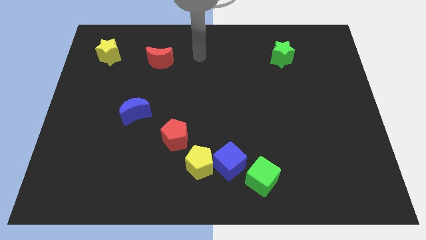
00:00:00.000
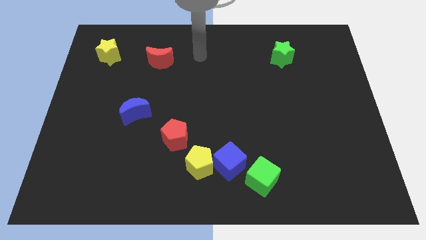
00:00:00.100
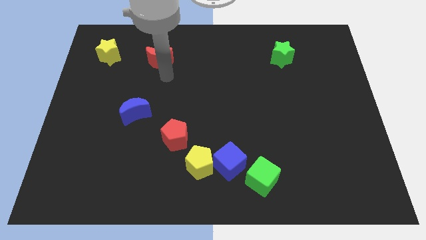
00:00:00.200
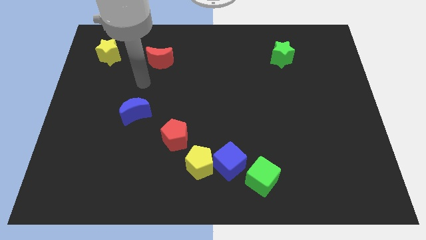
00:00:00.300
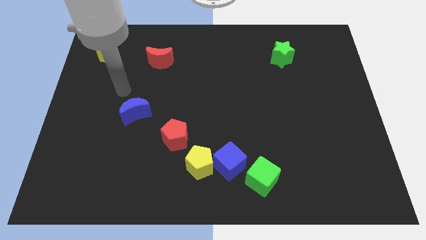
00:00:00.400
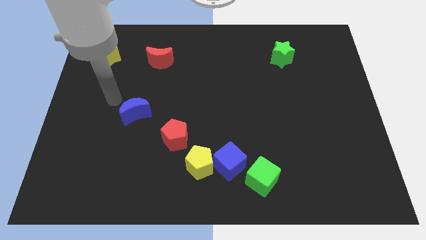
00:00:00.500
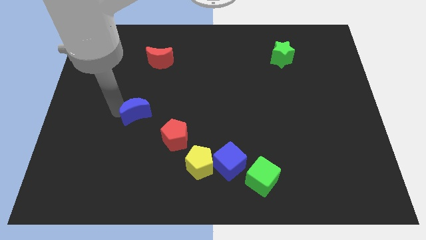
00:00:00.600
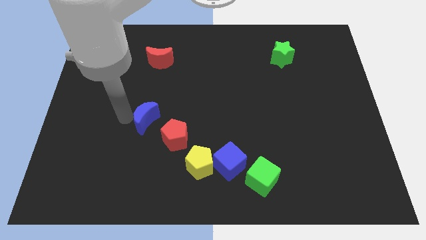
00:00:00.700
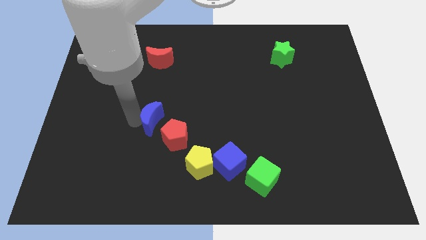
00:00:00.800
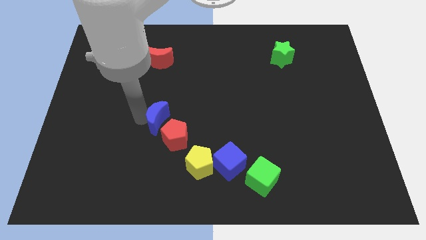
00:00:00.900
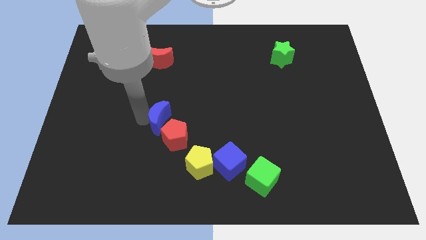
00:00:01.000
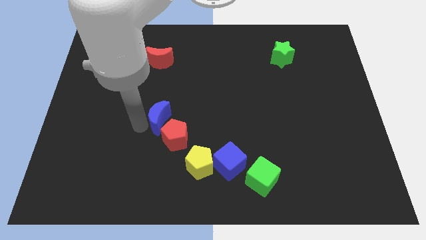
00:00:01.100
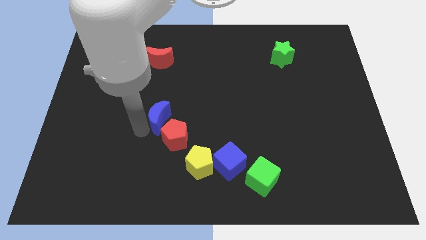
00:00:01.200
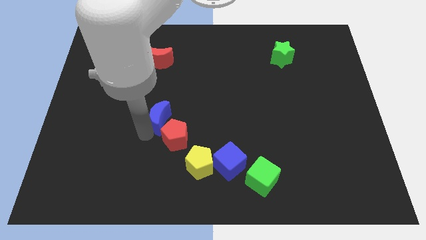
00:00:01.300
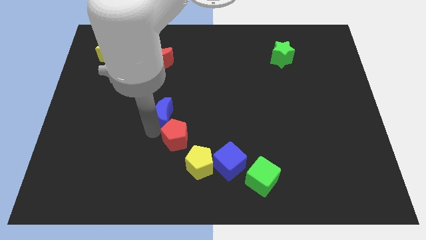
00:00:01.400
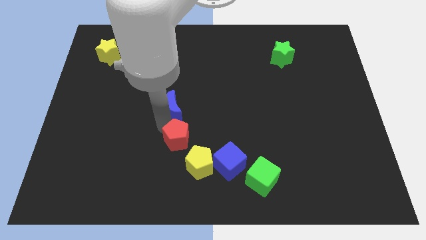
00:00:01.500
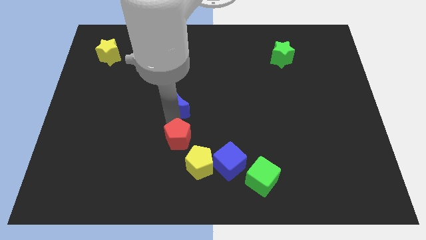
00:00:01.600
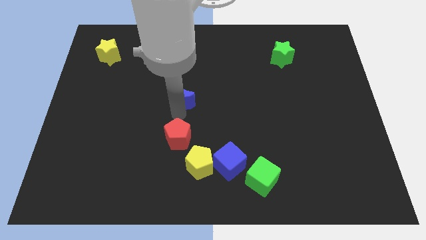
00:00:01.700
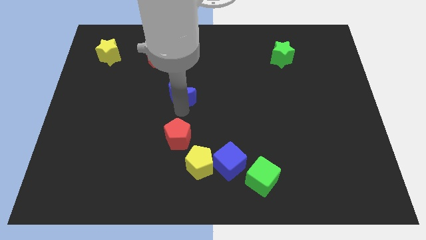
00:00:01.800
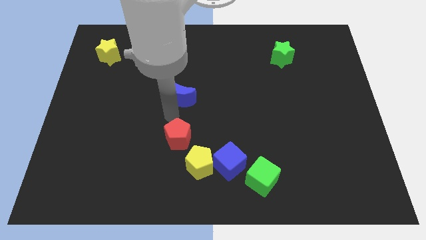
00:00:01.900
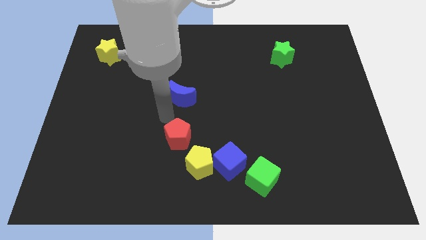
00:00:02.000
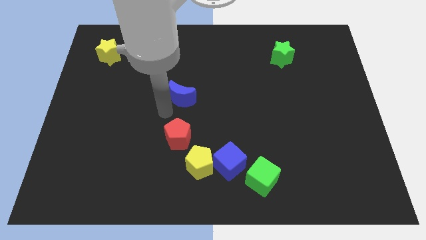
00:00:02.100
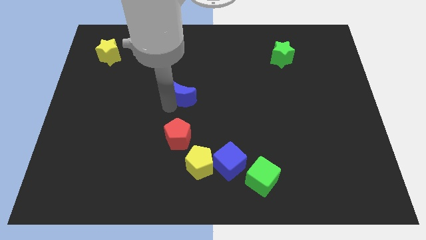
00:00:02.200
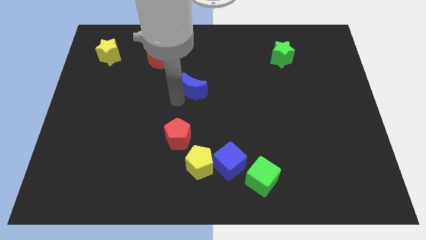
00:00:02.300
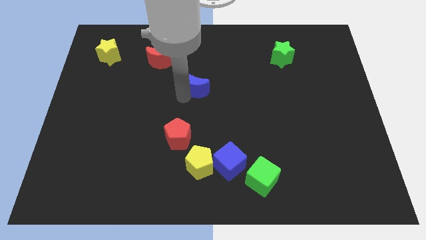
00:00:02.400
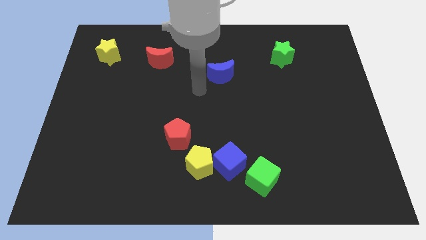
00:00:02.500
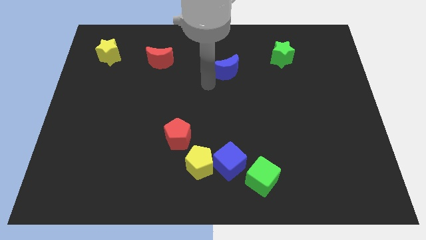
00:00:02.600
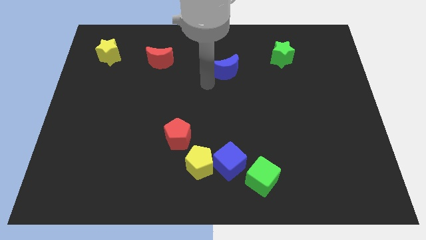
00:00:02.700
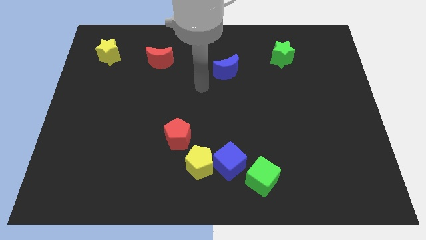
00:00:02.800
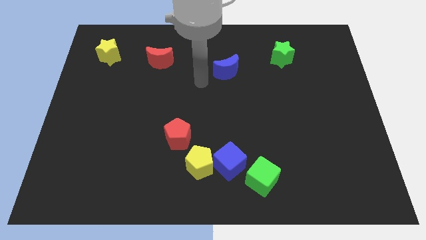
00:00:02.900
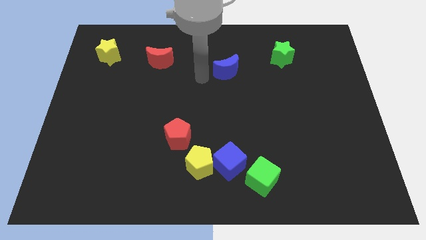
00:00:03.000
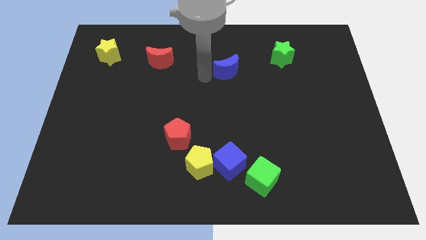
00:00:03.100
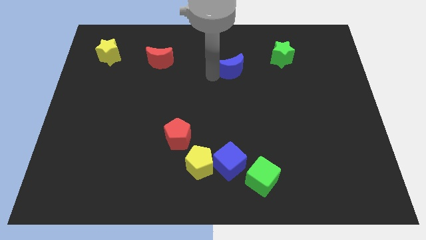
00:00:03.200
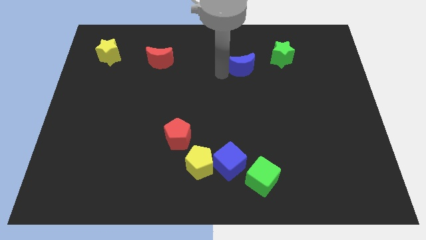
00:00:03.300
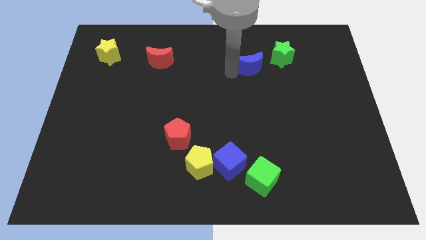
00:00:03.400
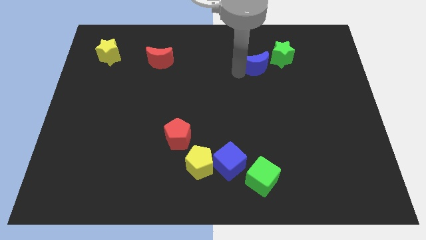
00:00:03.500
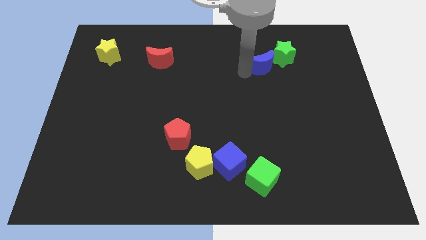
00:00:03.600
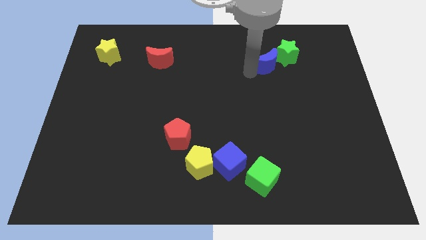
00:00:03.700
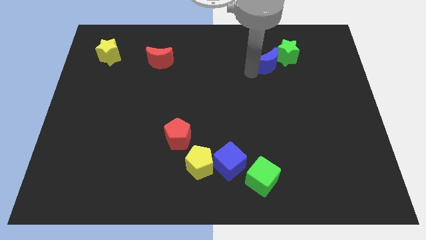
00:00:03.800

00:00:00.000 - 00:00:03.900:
move the blue moon towards the green star

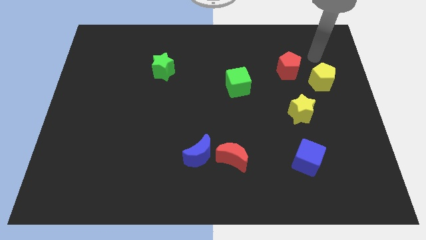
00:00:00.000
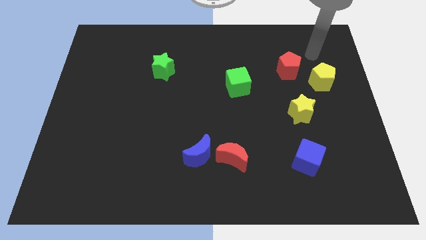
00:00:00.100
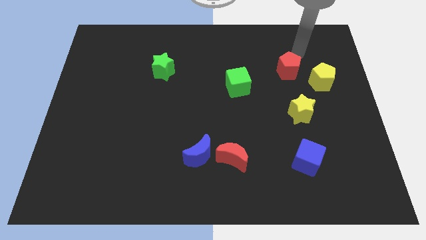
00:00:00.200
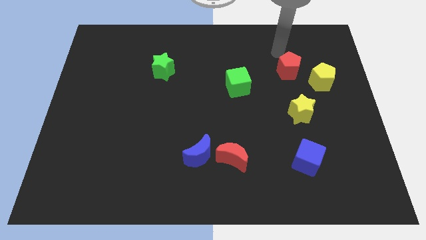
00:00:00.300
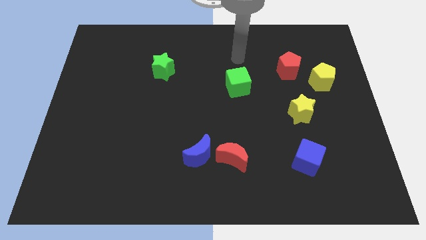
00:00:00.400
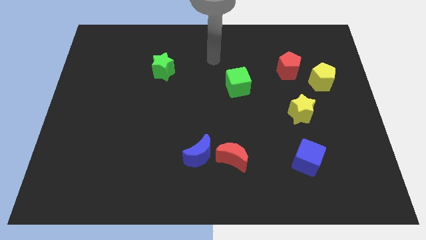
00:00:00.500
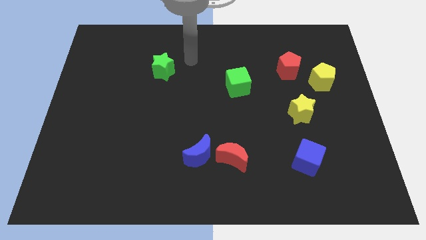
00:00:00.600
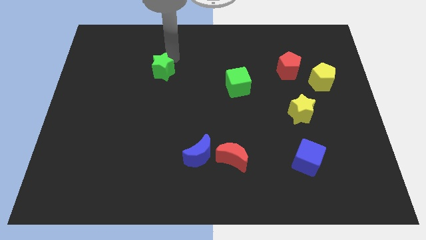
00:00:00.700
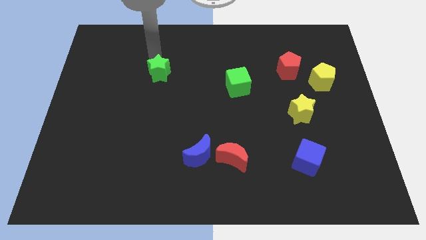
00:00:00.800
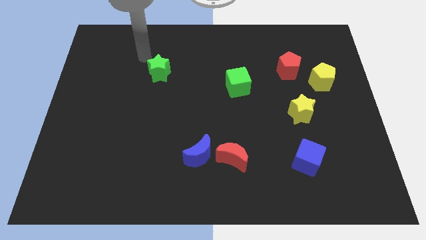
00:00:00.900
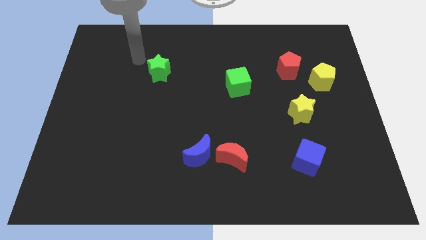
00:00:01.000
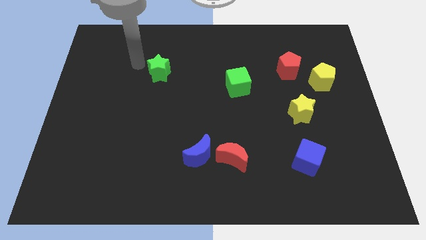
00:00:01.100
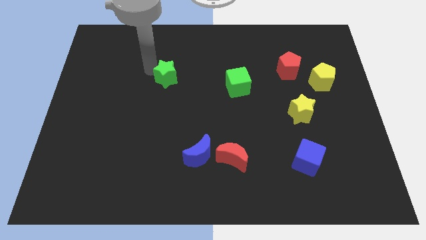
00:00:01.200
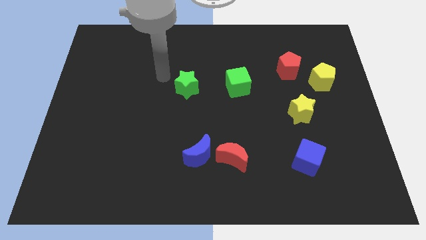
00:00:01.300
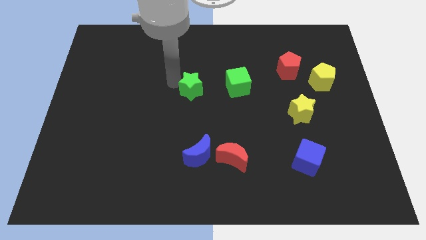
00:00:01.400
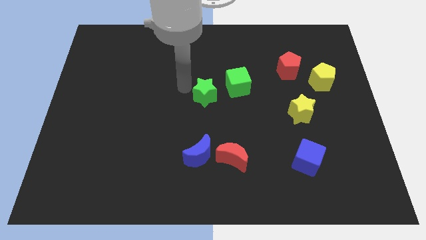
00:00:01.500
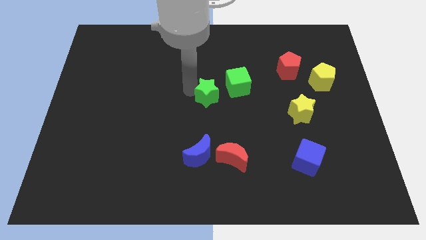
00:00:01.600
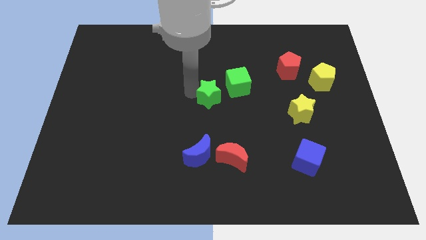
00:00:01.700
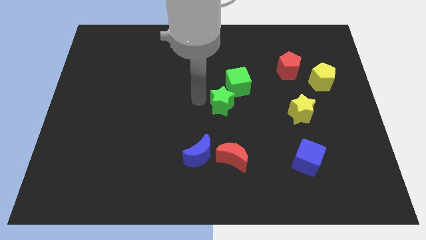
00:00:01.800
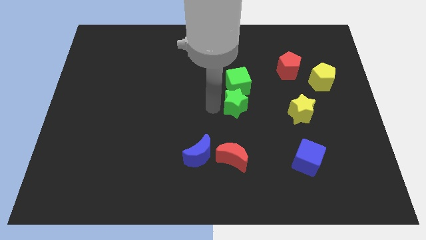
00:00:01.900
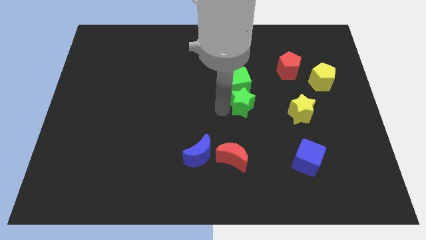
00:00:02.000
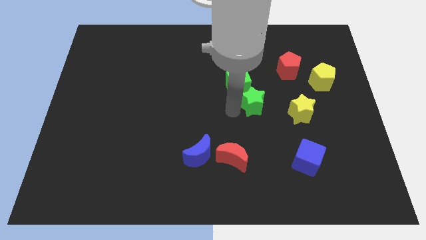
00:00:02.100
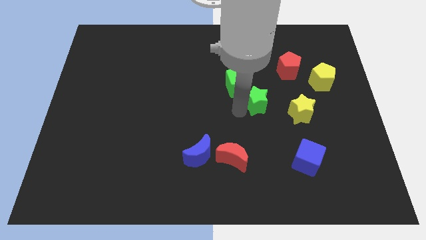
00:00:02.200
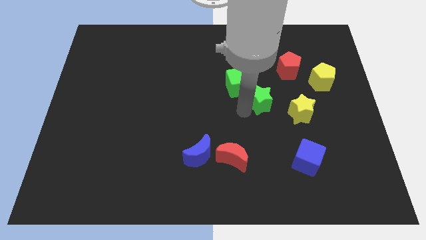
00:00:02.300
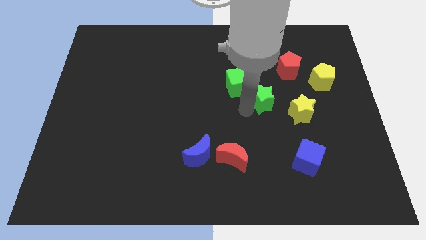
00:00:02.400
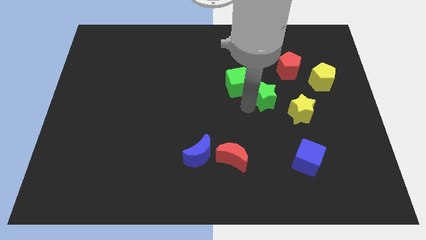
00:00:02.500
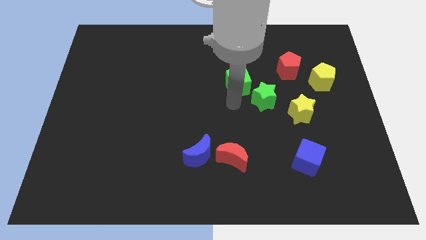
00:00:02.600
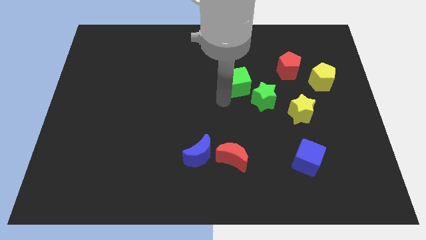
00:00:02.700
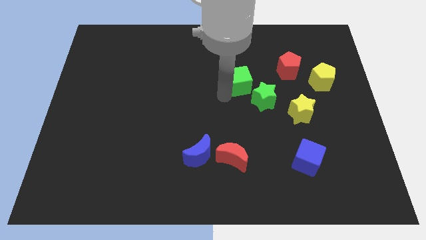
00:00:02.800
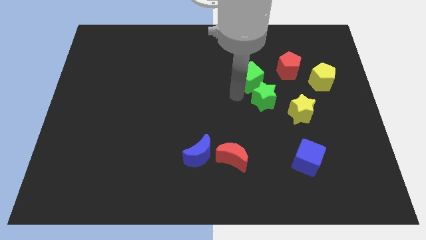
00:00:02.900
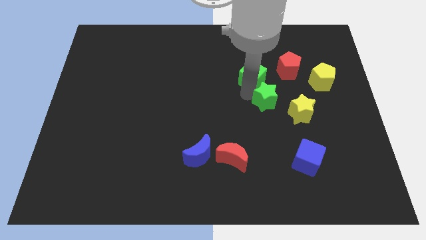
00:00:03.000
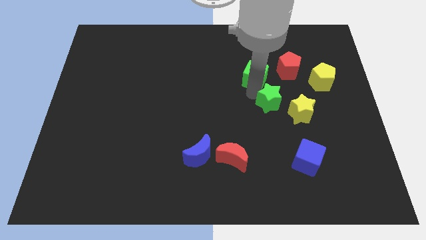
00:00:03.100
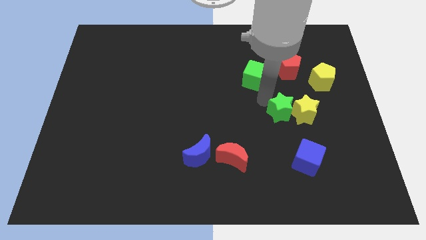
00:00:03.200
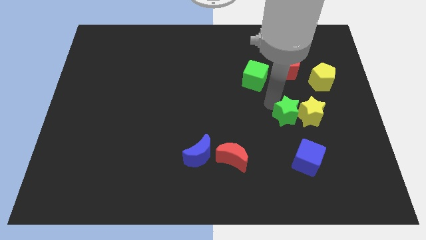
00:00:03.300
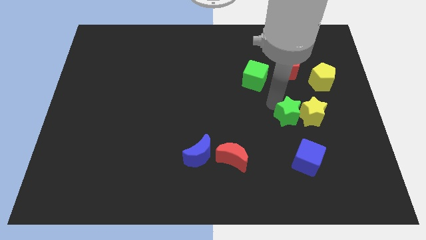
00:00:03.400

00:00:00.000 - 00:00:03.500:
move the green star close to the yellow star

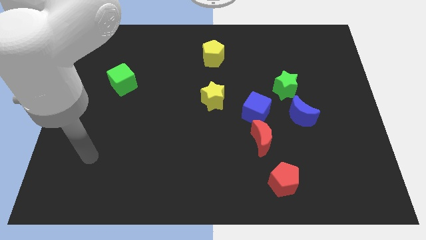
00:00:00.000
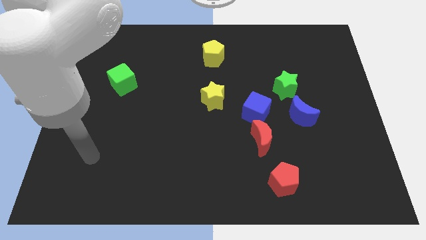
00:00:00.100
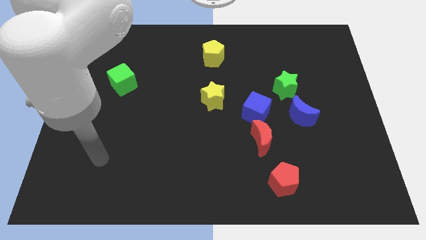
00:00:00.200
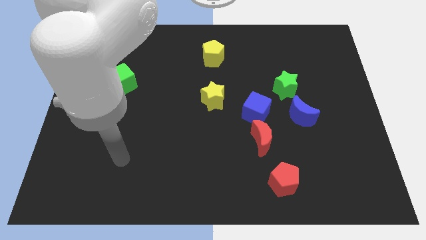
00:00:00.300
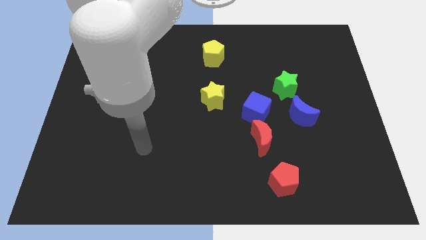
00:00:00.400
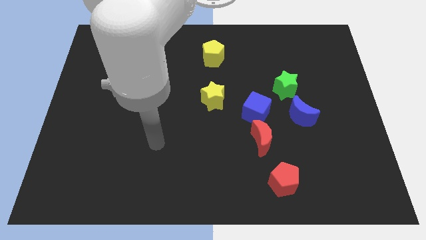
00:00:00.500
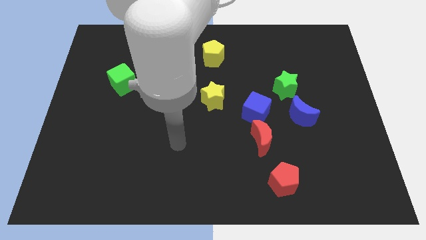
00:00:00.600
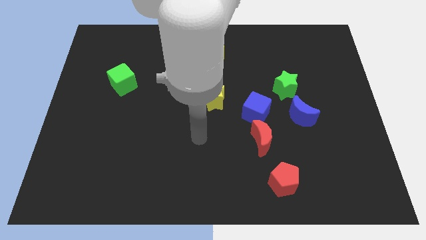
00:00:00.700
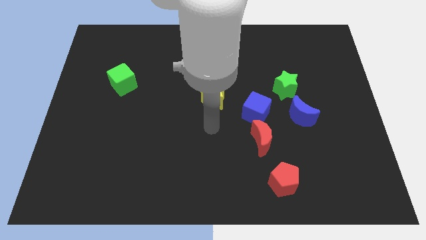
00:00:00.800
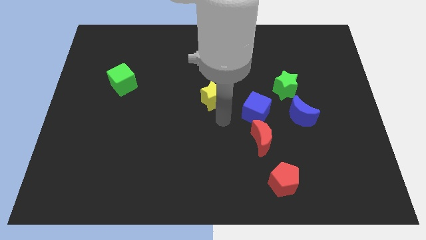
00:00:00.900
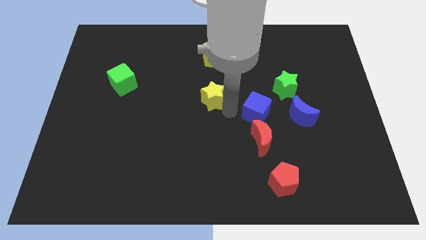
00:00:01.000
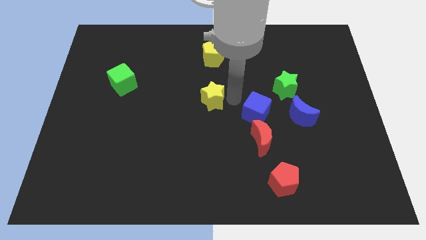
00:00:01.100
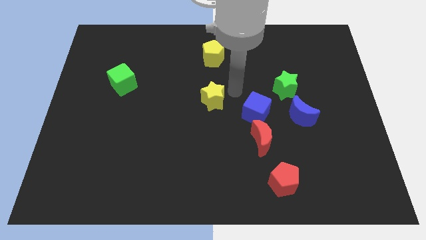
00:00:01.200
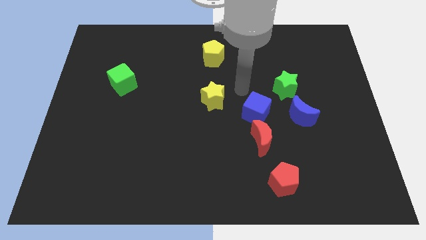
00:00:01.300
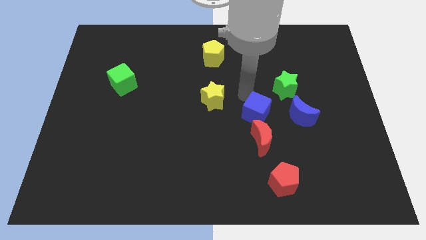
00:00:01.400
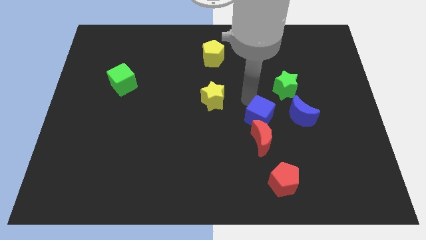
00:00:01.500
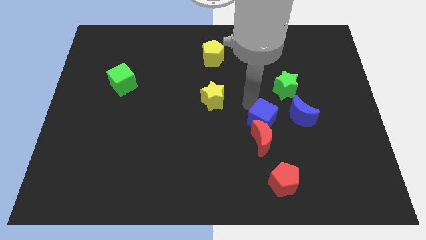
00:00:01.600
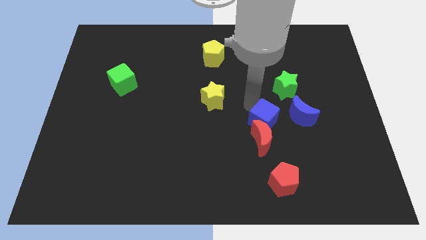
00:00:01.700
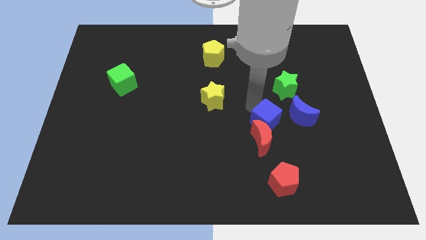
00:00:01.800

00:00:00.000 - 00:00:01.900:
put the blue cube to the red moon
